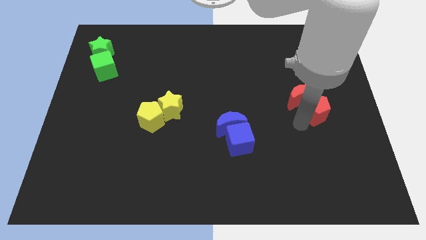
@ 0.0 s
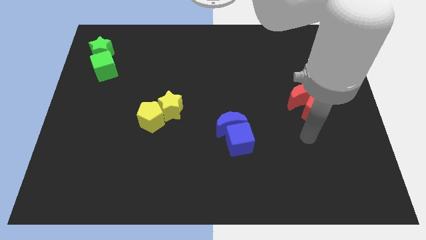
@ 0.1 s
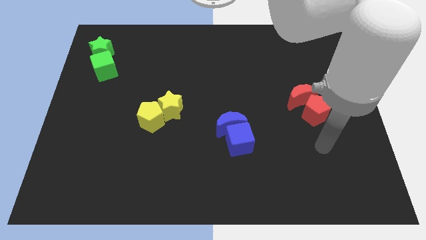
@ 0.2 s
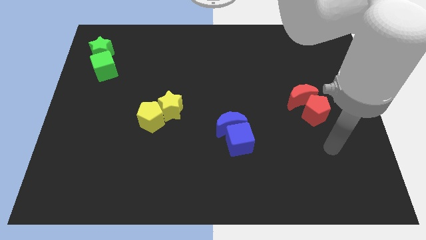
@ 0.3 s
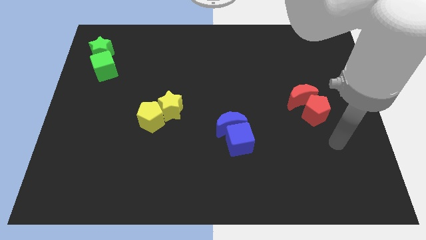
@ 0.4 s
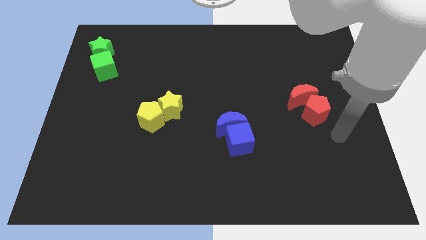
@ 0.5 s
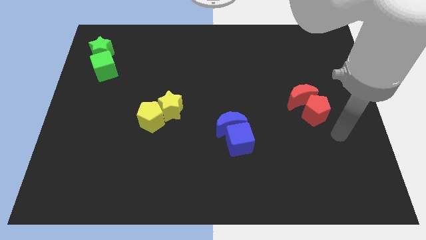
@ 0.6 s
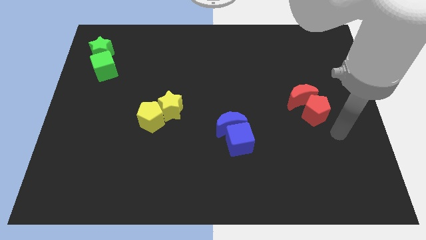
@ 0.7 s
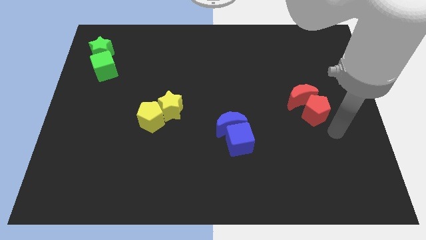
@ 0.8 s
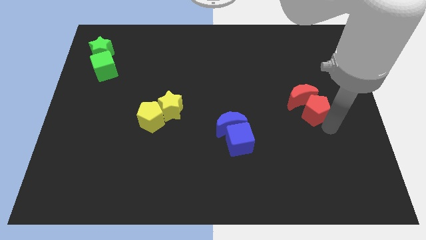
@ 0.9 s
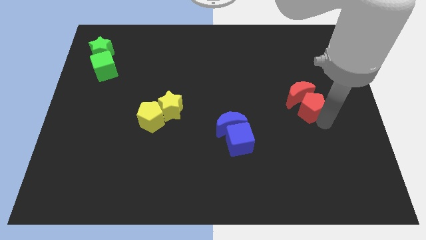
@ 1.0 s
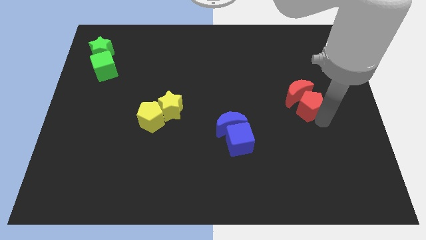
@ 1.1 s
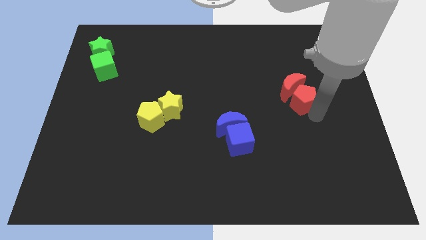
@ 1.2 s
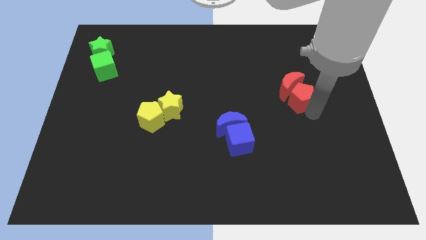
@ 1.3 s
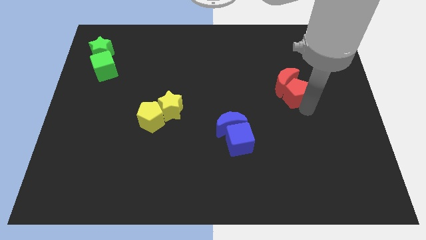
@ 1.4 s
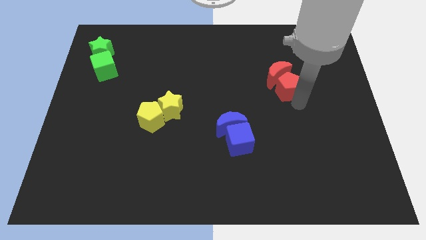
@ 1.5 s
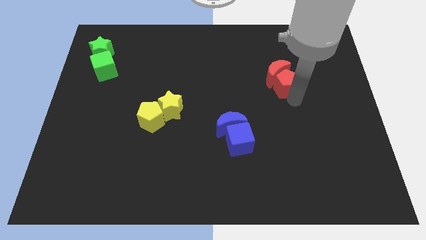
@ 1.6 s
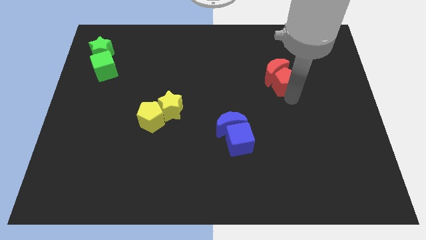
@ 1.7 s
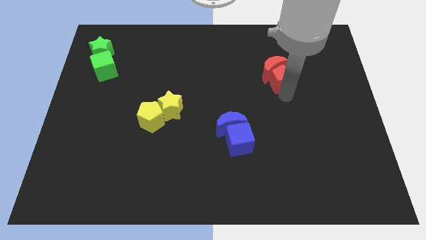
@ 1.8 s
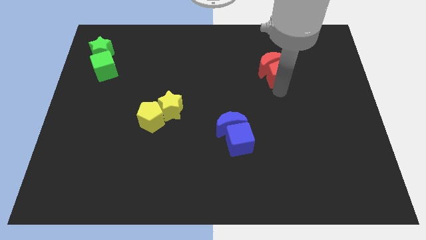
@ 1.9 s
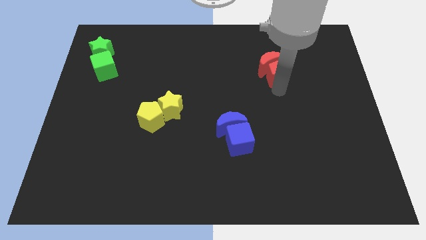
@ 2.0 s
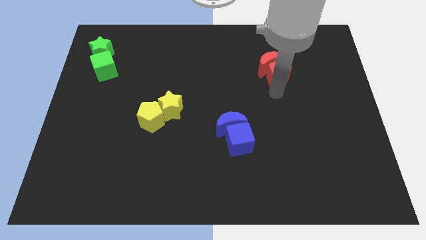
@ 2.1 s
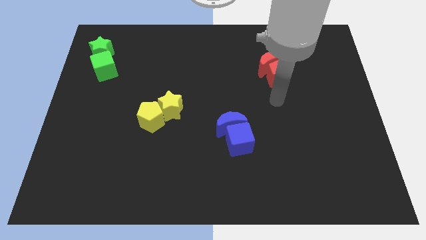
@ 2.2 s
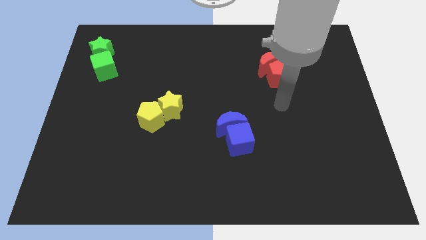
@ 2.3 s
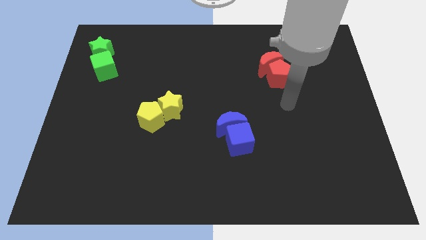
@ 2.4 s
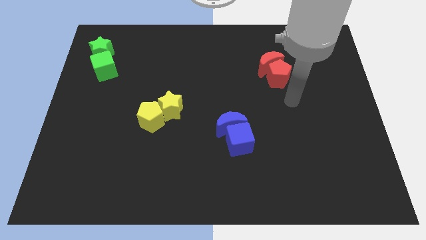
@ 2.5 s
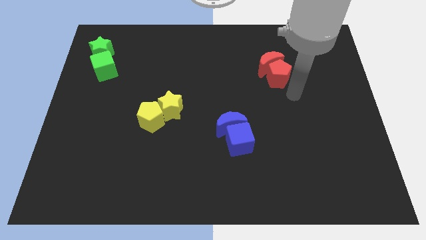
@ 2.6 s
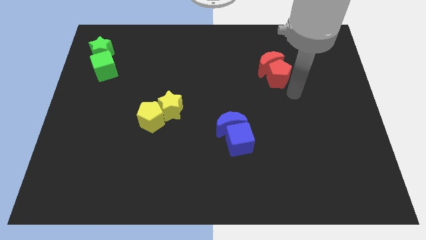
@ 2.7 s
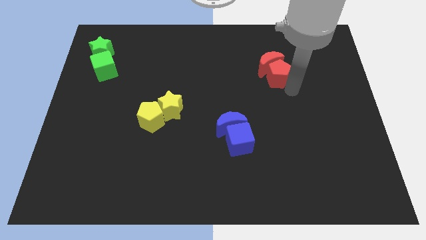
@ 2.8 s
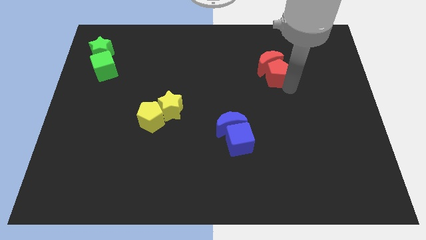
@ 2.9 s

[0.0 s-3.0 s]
move red blocks to the right top

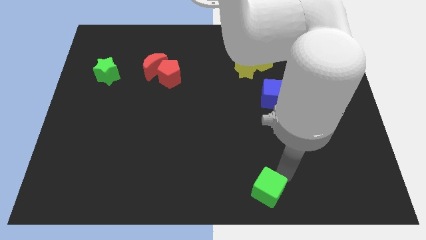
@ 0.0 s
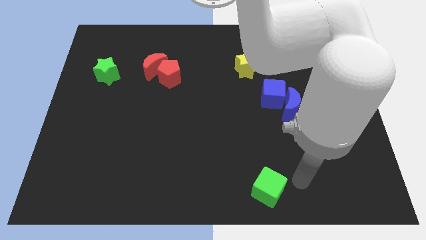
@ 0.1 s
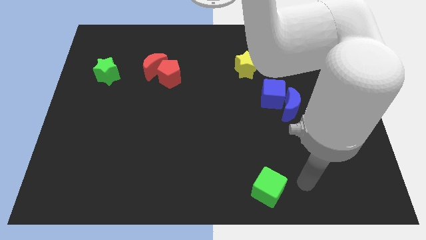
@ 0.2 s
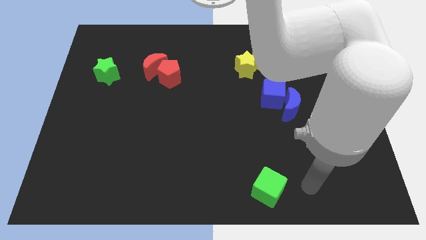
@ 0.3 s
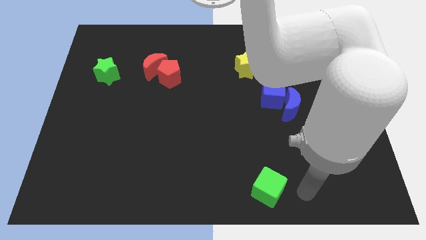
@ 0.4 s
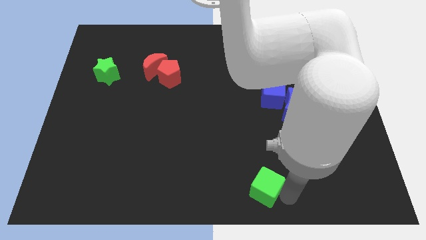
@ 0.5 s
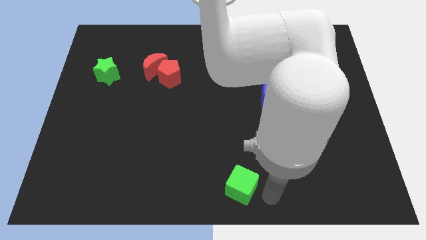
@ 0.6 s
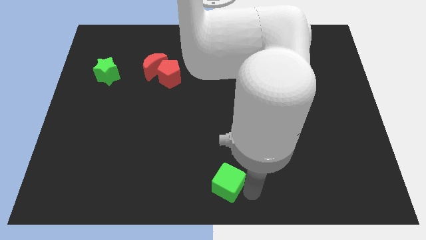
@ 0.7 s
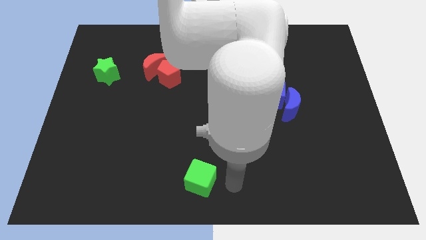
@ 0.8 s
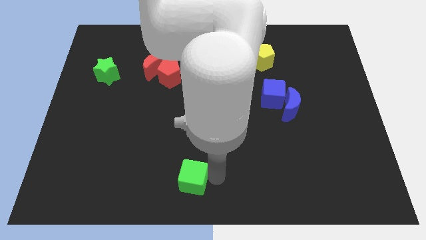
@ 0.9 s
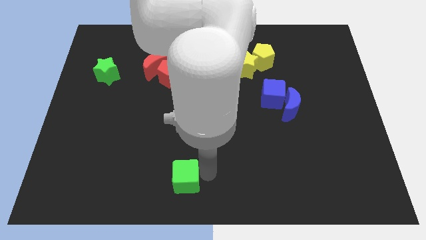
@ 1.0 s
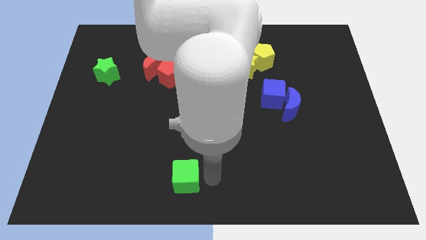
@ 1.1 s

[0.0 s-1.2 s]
move the green cube towards the left side of the board

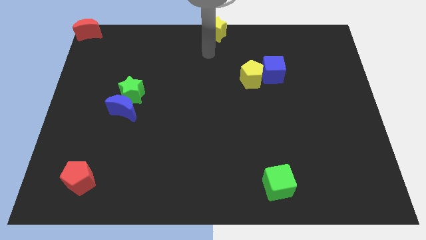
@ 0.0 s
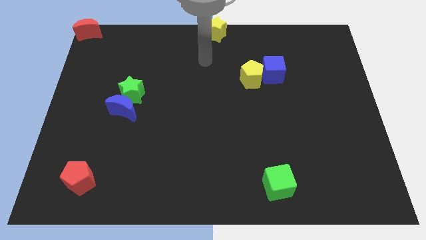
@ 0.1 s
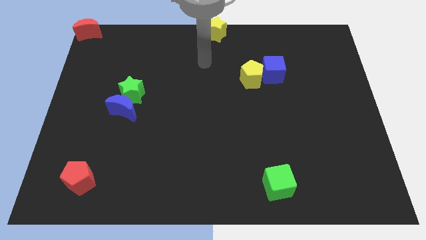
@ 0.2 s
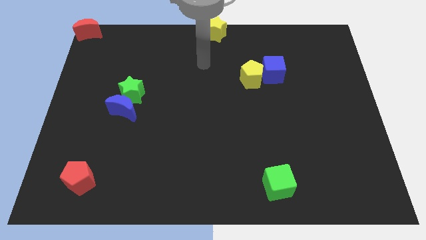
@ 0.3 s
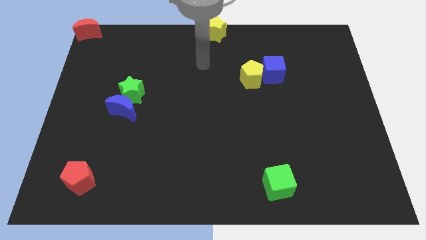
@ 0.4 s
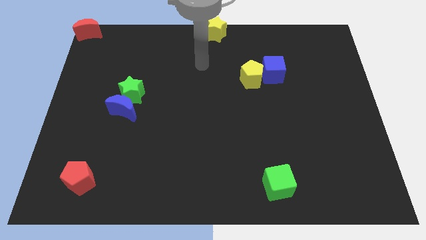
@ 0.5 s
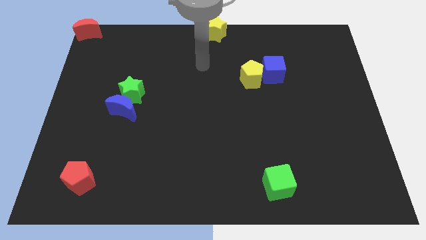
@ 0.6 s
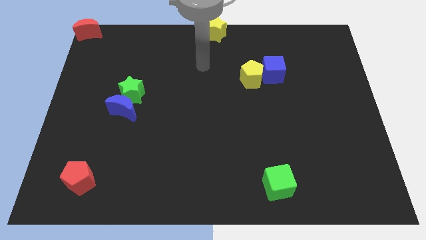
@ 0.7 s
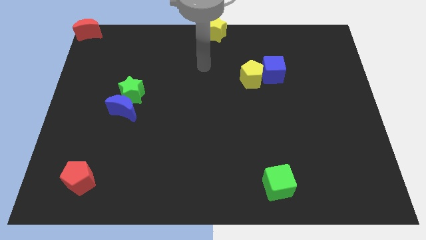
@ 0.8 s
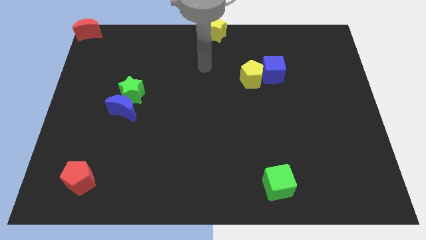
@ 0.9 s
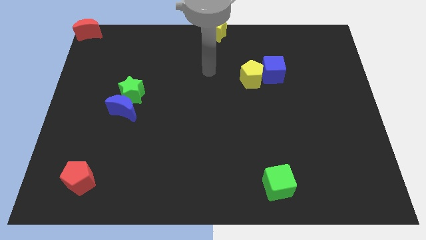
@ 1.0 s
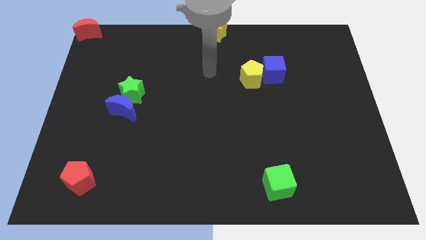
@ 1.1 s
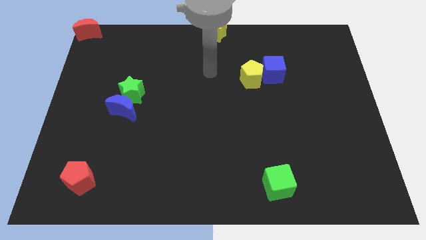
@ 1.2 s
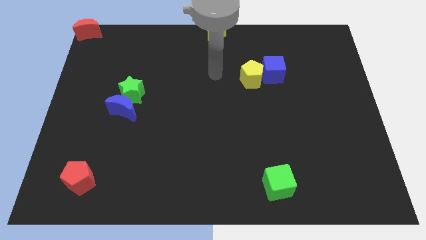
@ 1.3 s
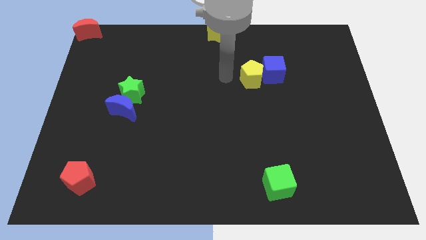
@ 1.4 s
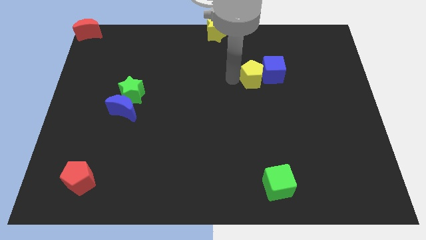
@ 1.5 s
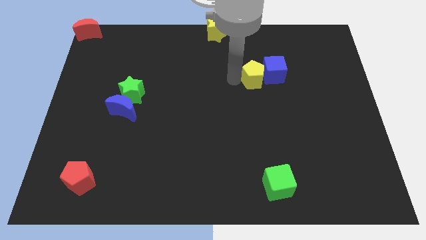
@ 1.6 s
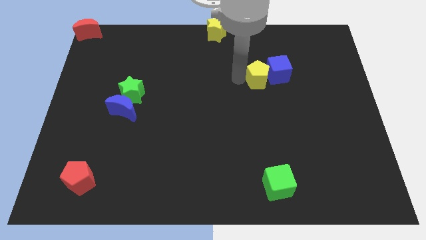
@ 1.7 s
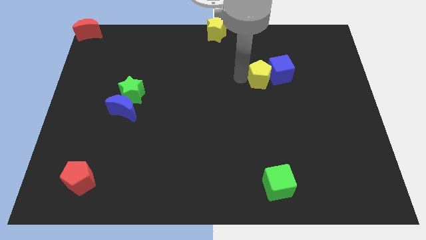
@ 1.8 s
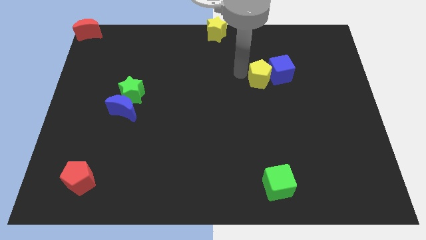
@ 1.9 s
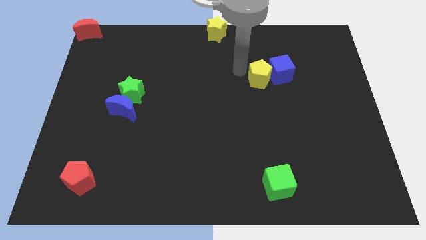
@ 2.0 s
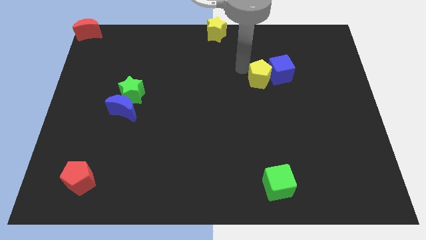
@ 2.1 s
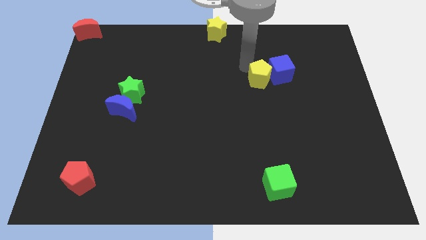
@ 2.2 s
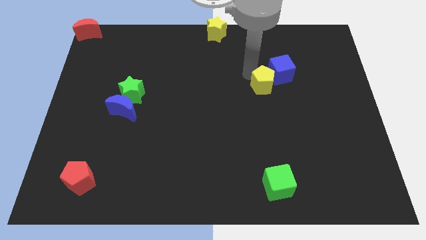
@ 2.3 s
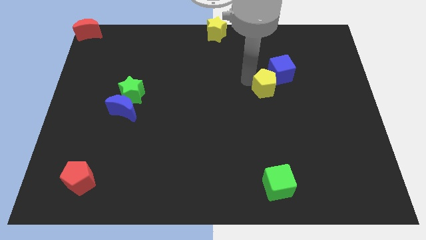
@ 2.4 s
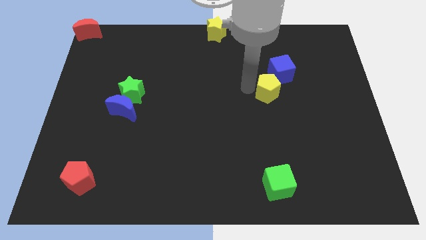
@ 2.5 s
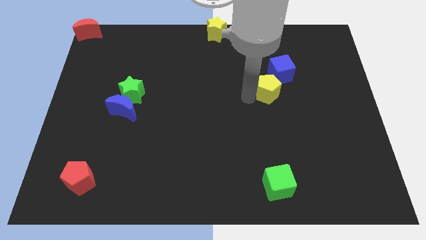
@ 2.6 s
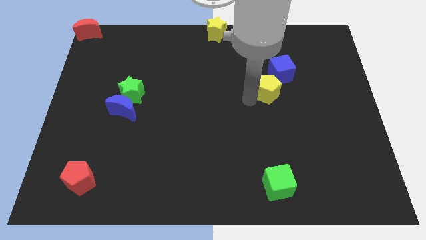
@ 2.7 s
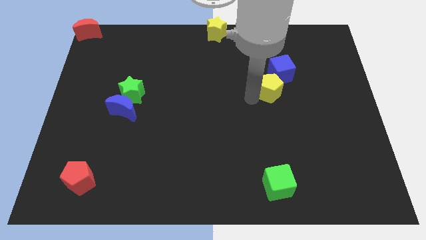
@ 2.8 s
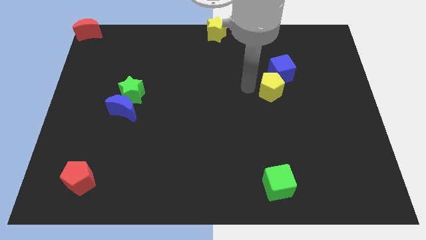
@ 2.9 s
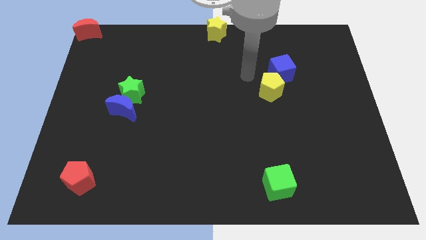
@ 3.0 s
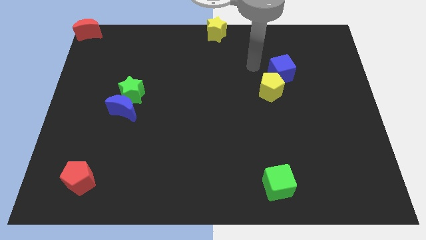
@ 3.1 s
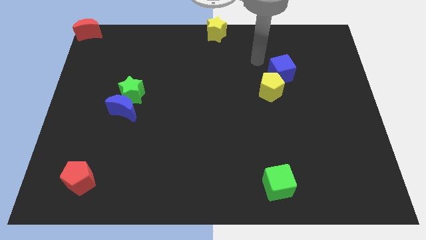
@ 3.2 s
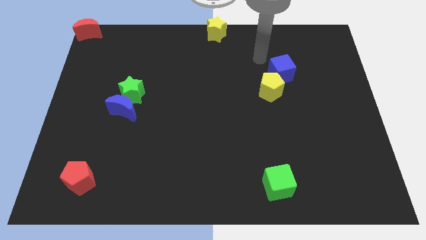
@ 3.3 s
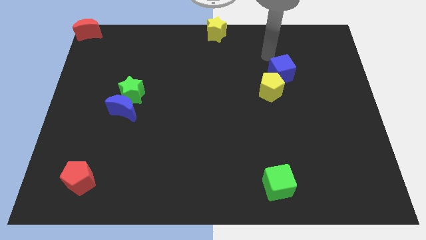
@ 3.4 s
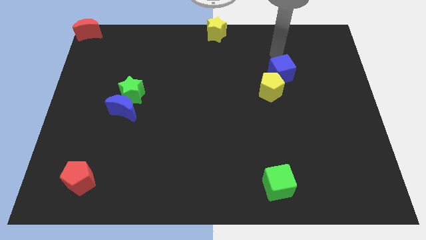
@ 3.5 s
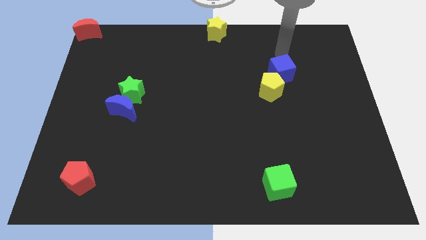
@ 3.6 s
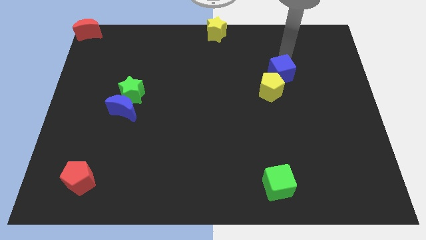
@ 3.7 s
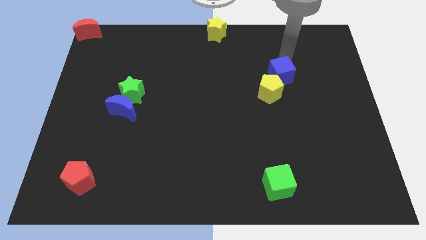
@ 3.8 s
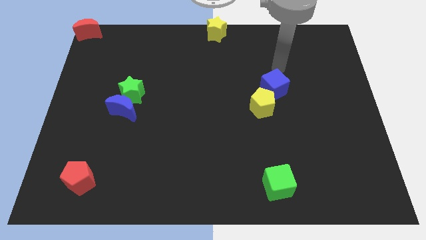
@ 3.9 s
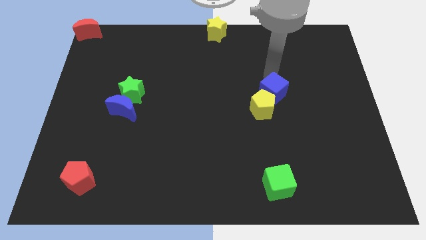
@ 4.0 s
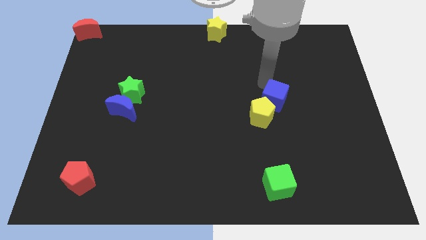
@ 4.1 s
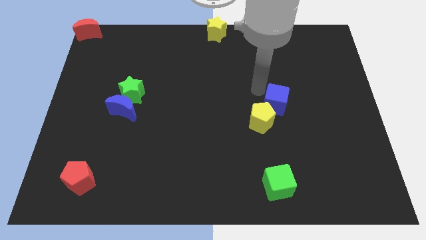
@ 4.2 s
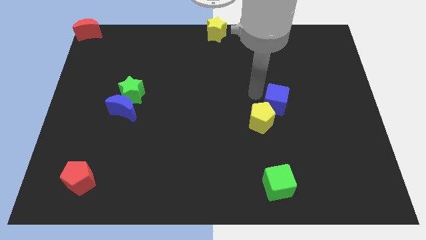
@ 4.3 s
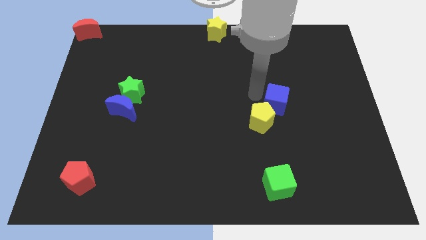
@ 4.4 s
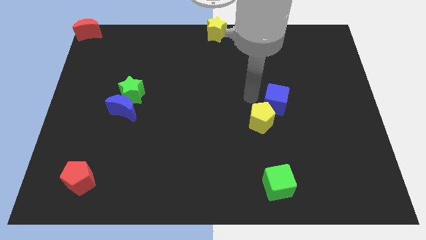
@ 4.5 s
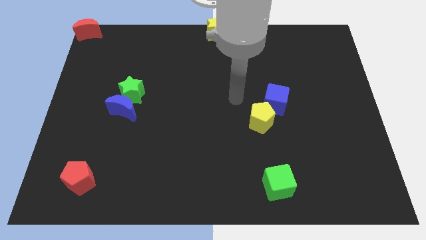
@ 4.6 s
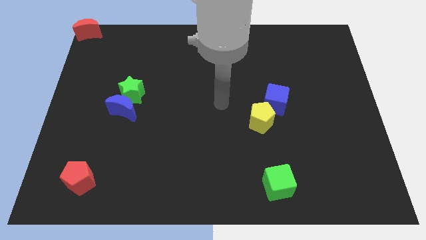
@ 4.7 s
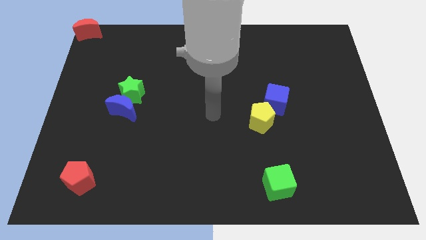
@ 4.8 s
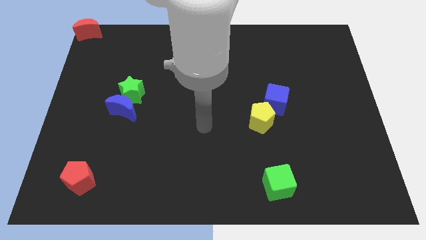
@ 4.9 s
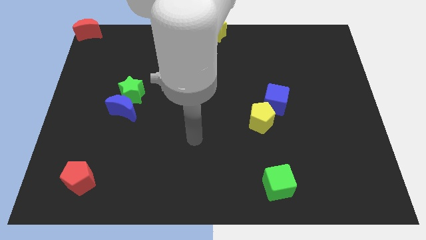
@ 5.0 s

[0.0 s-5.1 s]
move the yellow pentagon and the blue cube together slightly to the bottom
